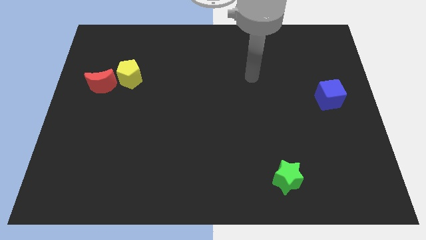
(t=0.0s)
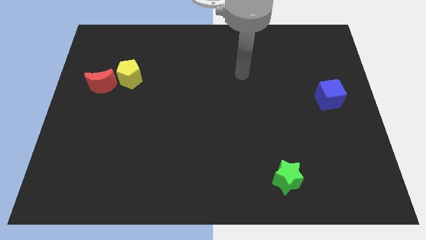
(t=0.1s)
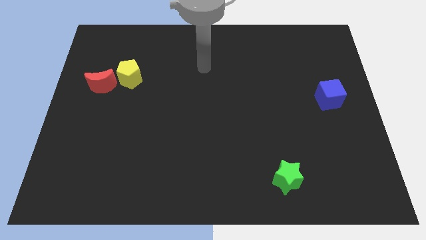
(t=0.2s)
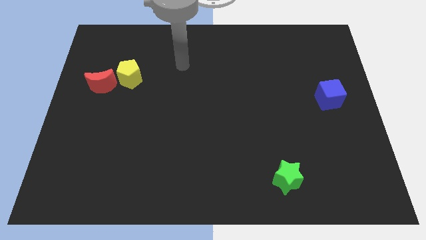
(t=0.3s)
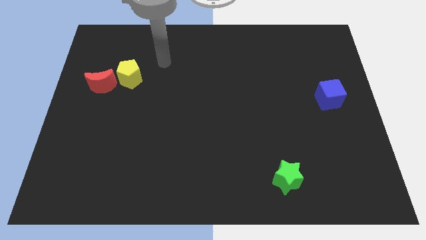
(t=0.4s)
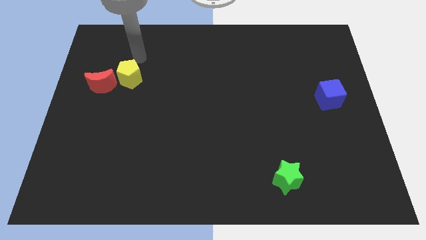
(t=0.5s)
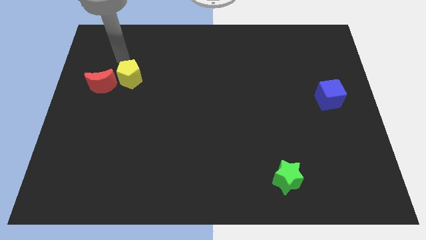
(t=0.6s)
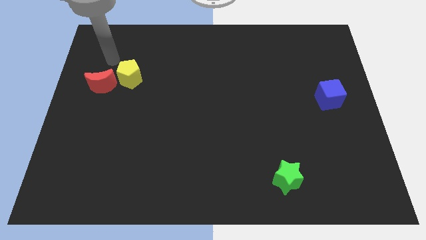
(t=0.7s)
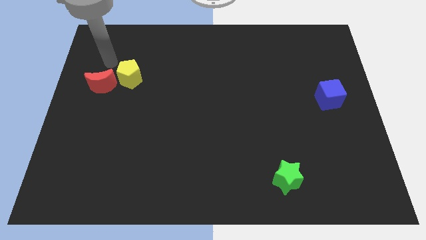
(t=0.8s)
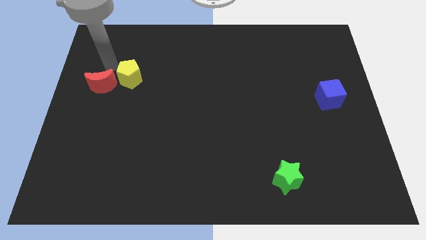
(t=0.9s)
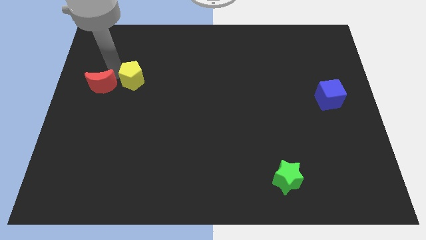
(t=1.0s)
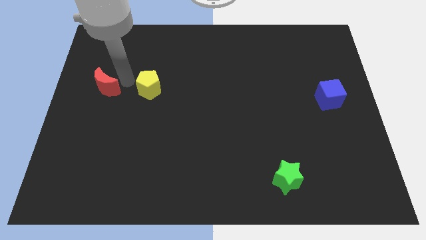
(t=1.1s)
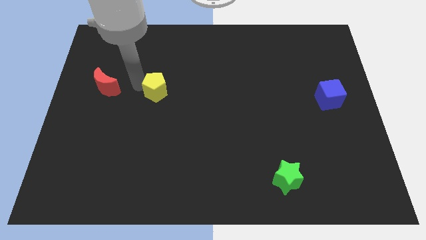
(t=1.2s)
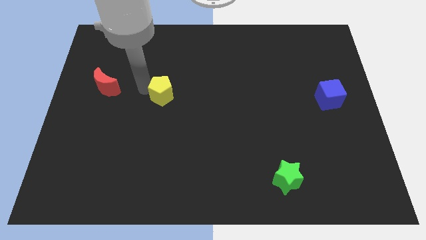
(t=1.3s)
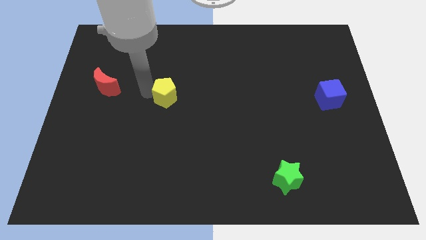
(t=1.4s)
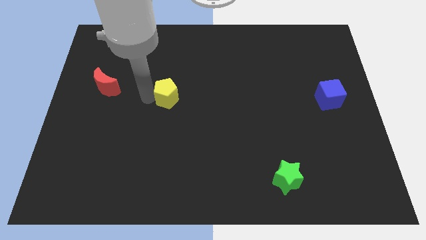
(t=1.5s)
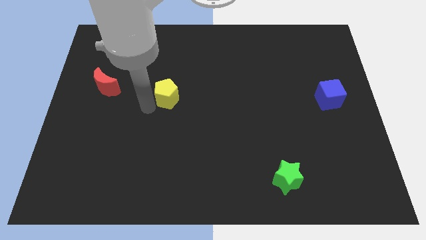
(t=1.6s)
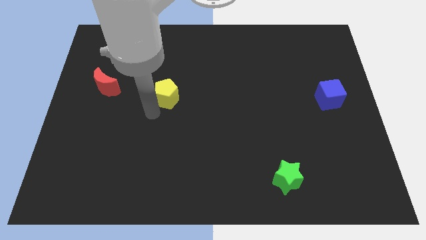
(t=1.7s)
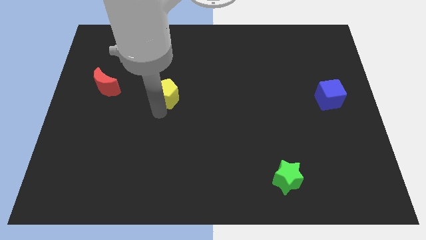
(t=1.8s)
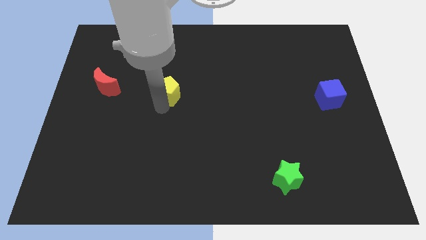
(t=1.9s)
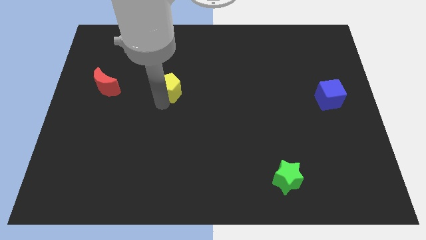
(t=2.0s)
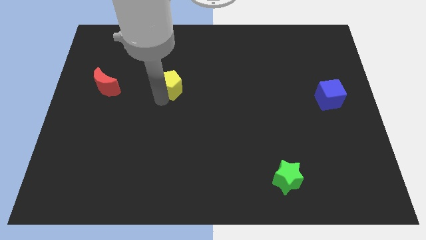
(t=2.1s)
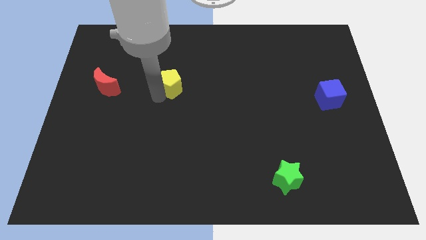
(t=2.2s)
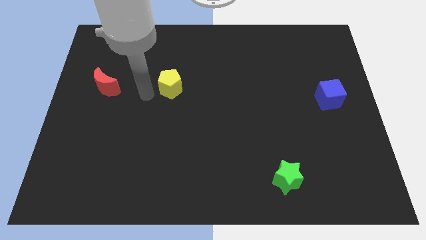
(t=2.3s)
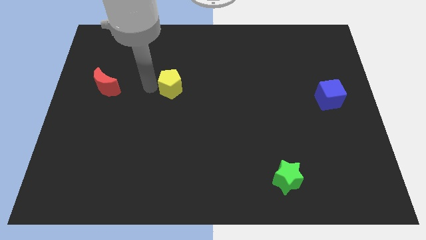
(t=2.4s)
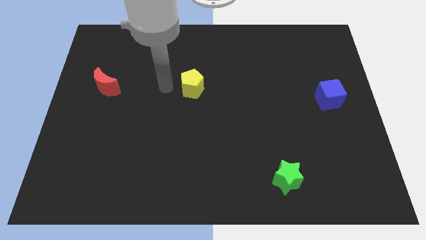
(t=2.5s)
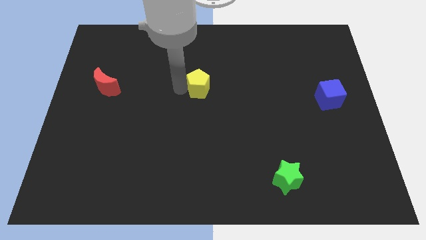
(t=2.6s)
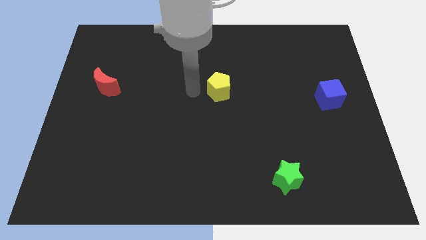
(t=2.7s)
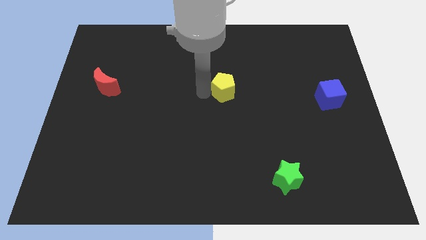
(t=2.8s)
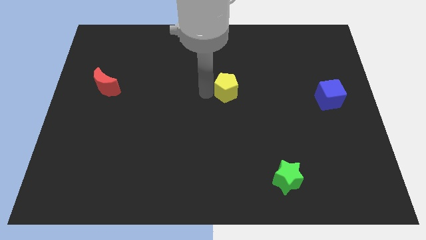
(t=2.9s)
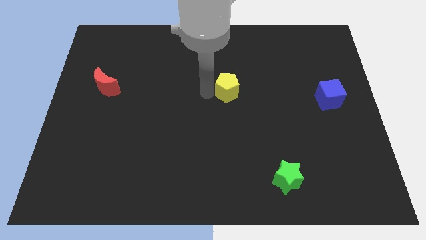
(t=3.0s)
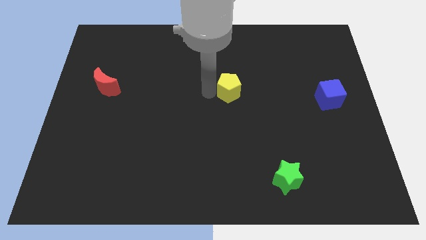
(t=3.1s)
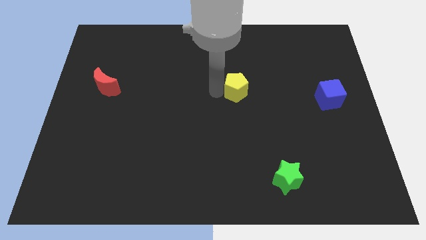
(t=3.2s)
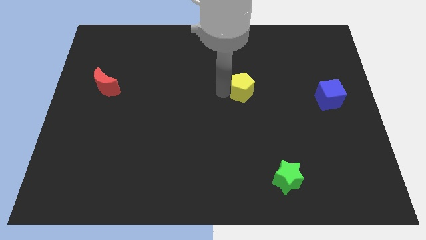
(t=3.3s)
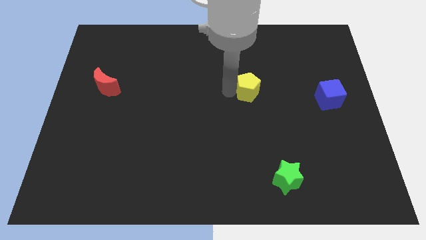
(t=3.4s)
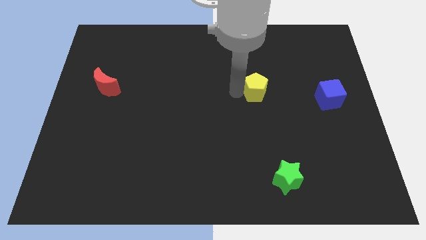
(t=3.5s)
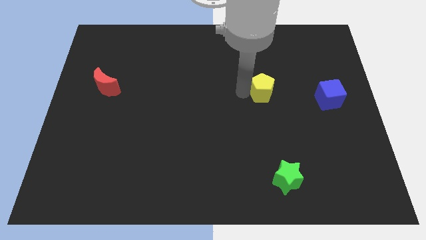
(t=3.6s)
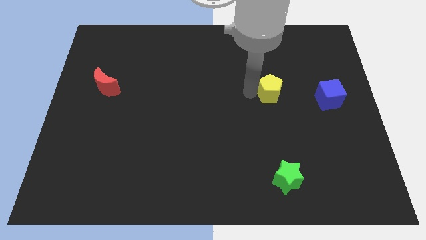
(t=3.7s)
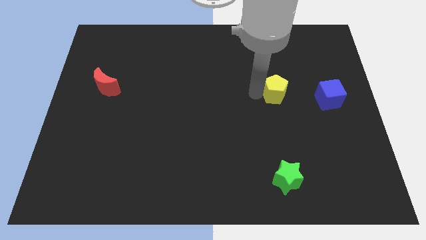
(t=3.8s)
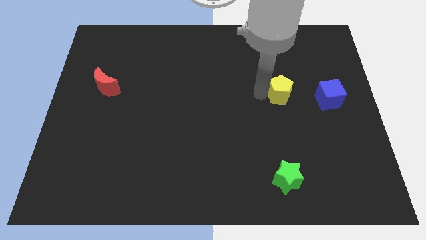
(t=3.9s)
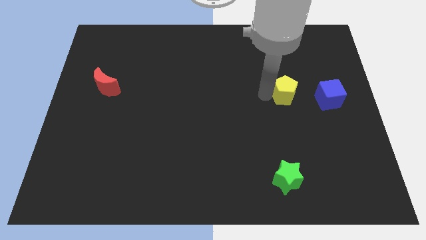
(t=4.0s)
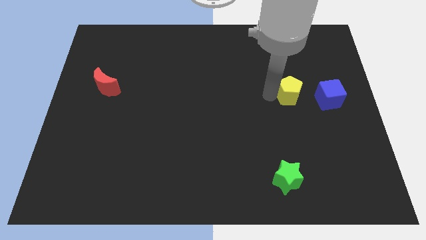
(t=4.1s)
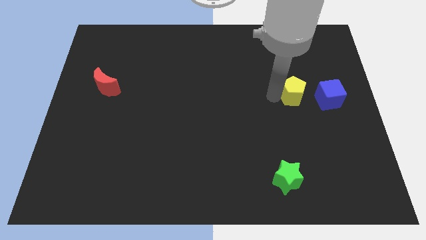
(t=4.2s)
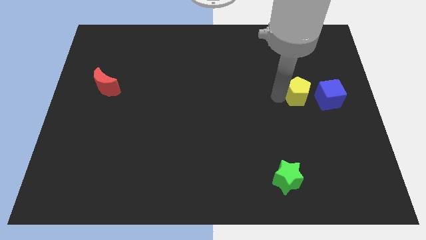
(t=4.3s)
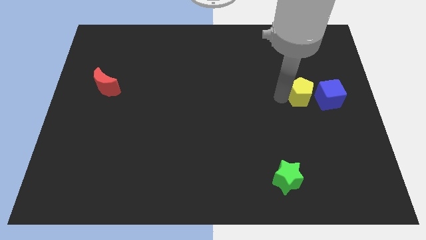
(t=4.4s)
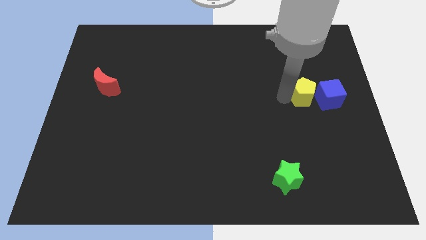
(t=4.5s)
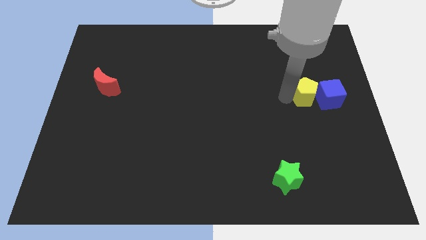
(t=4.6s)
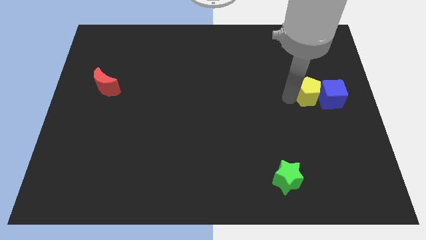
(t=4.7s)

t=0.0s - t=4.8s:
slide the yellow block close to the blue cube

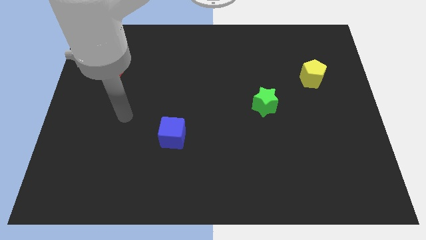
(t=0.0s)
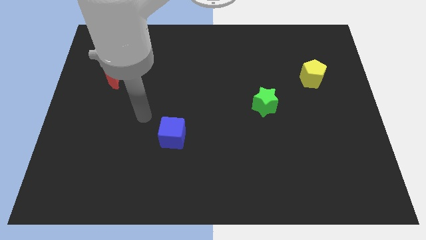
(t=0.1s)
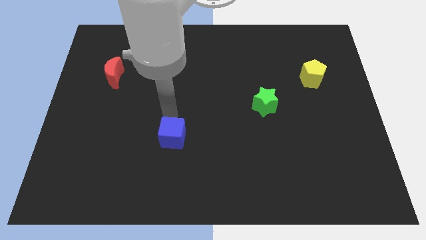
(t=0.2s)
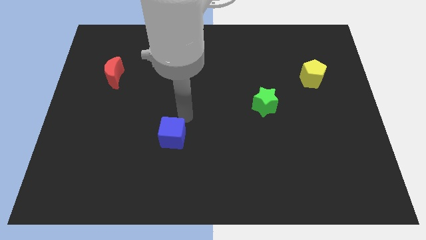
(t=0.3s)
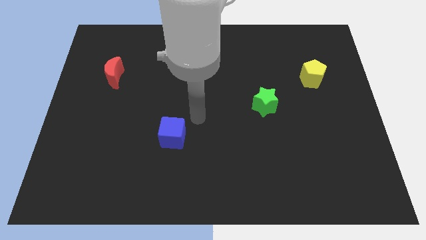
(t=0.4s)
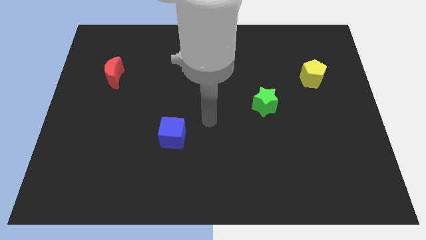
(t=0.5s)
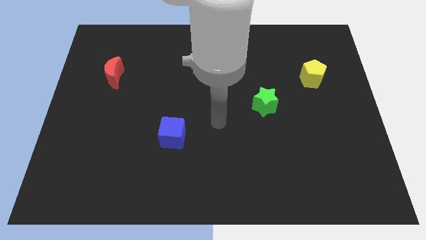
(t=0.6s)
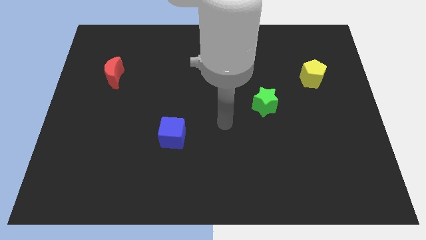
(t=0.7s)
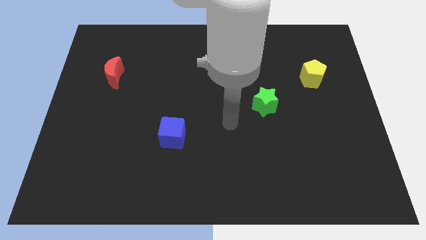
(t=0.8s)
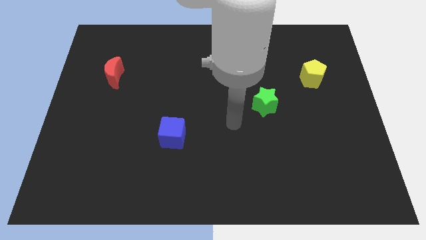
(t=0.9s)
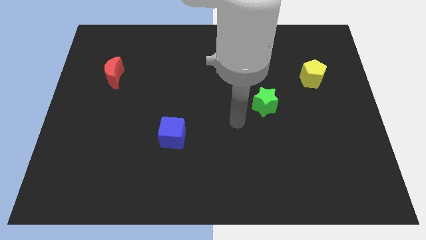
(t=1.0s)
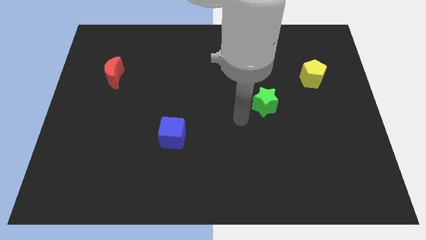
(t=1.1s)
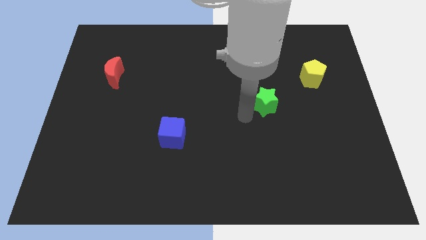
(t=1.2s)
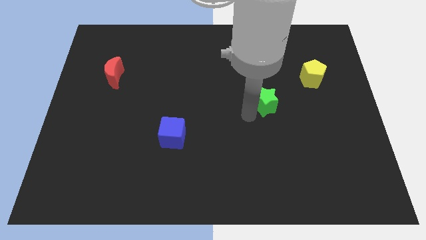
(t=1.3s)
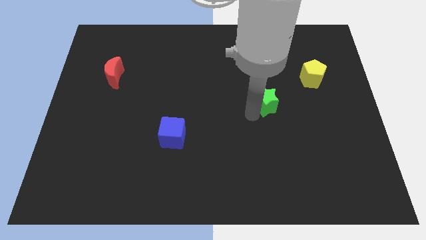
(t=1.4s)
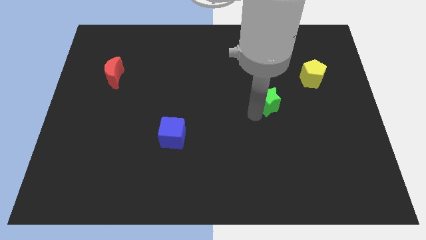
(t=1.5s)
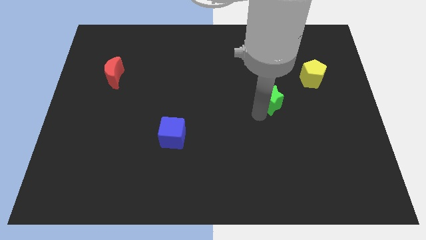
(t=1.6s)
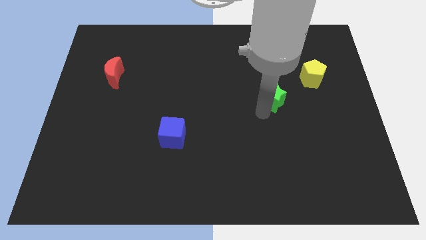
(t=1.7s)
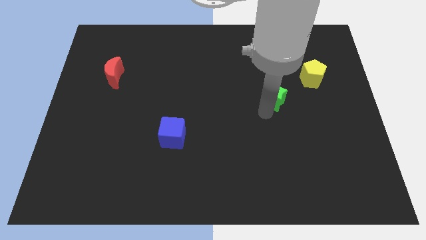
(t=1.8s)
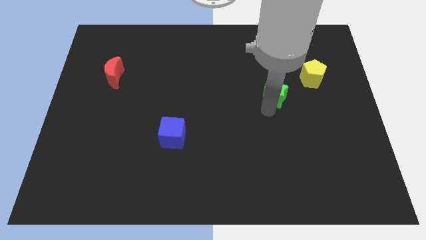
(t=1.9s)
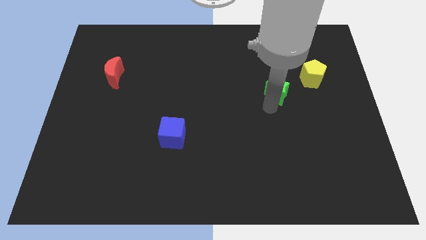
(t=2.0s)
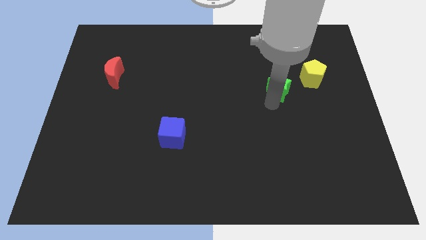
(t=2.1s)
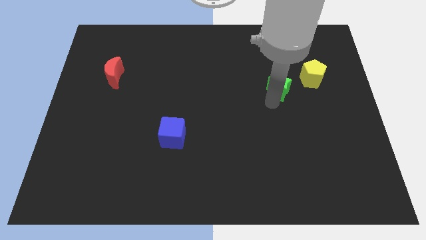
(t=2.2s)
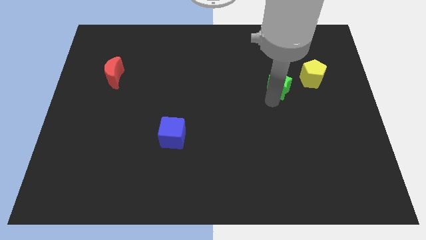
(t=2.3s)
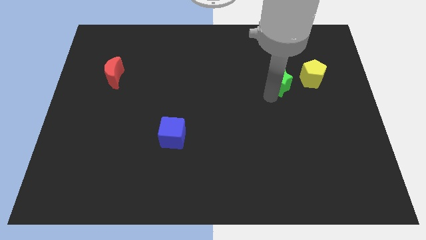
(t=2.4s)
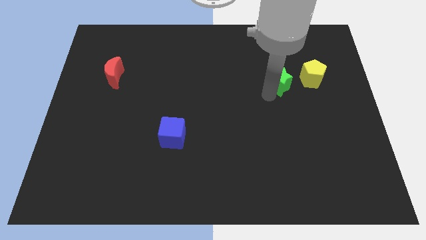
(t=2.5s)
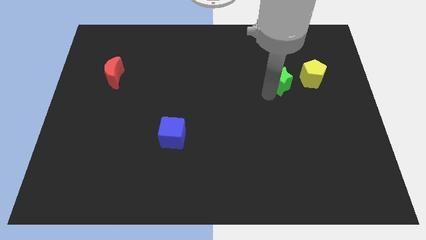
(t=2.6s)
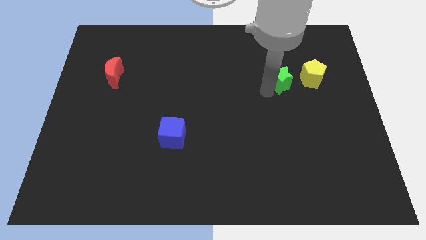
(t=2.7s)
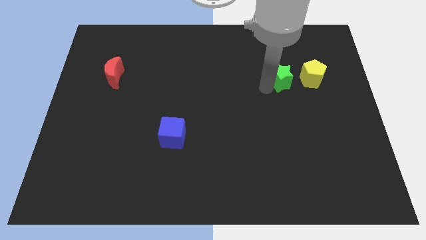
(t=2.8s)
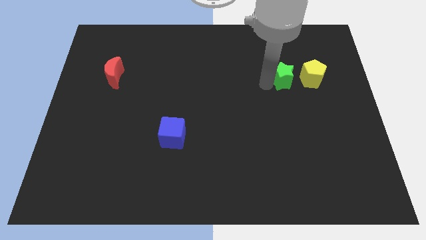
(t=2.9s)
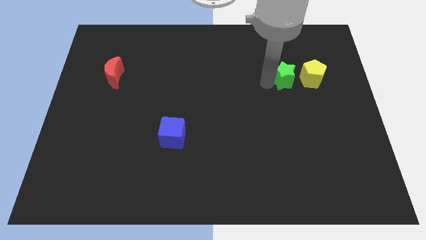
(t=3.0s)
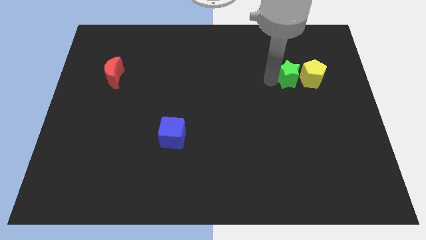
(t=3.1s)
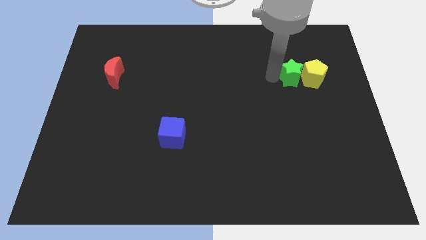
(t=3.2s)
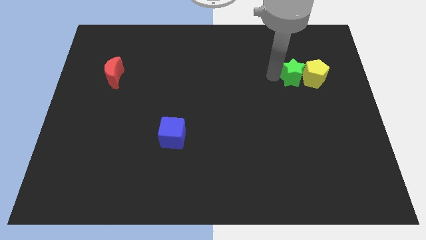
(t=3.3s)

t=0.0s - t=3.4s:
move the green star towards the yellow pentagon

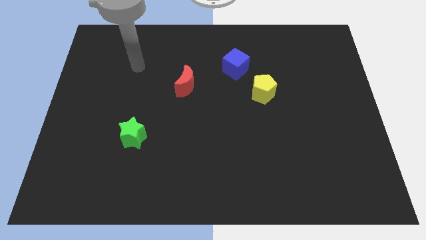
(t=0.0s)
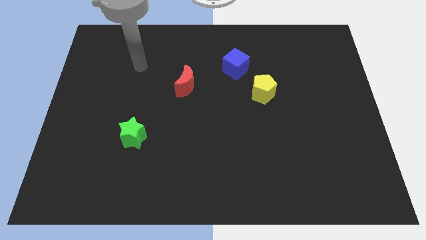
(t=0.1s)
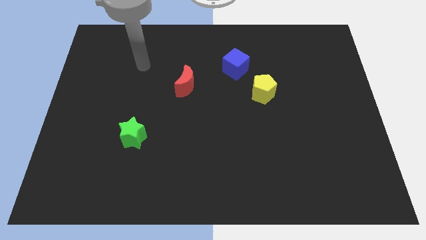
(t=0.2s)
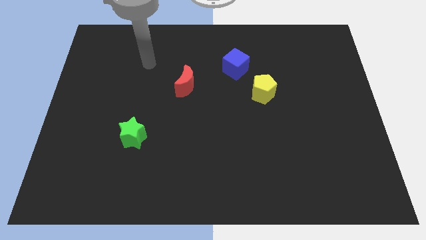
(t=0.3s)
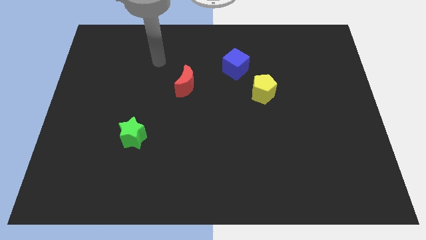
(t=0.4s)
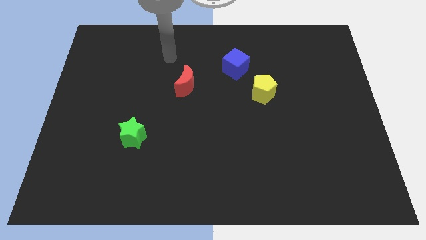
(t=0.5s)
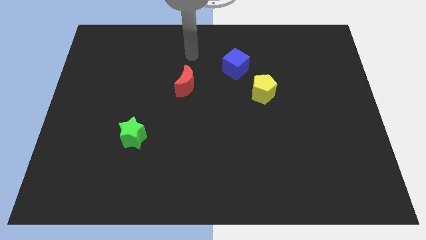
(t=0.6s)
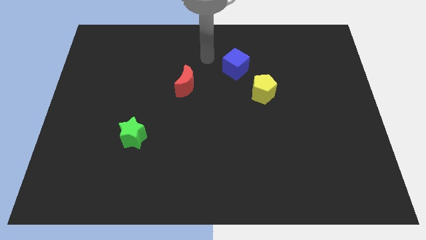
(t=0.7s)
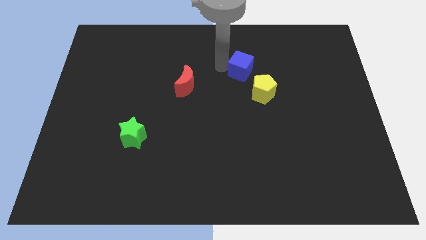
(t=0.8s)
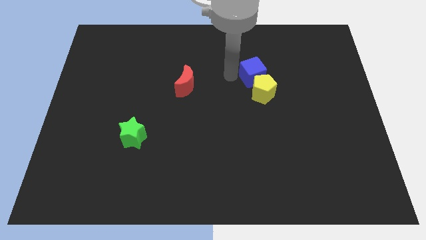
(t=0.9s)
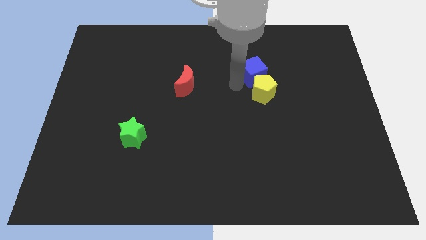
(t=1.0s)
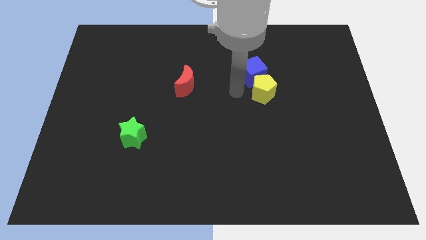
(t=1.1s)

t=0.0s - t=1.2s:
push the yellow block close to the blue cube
